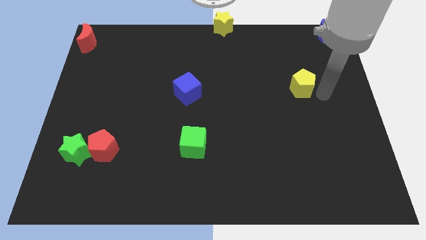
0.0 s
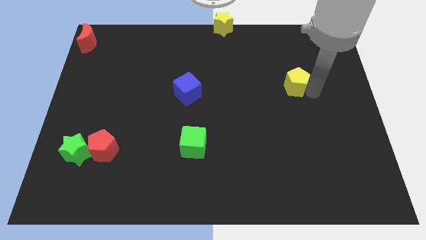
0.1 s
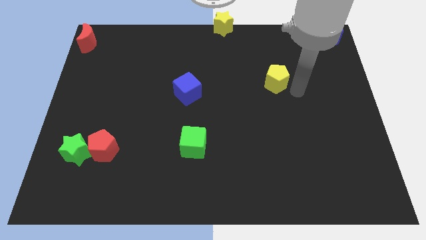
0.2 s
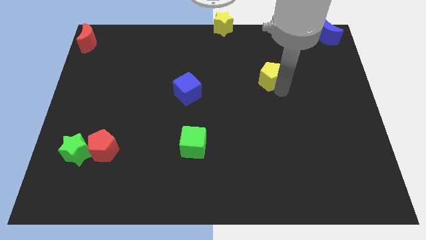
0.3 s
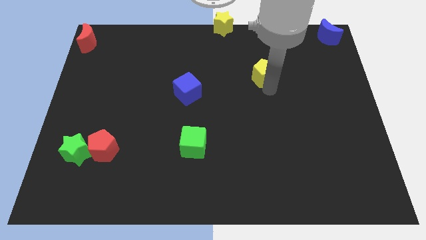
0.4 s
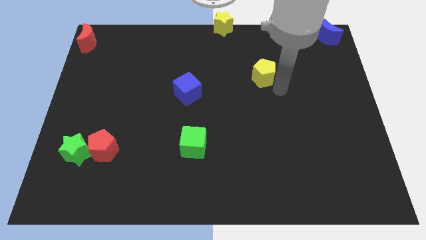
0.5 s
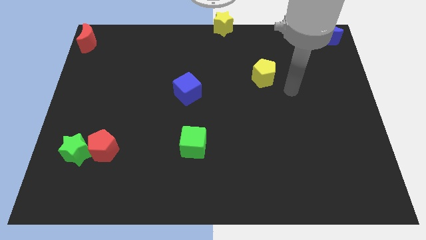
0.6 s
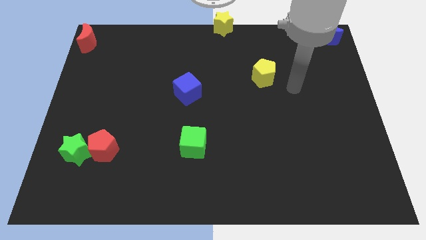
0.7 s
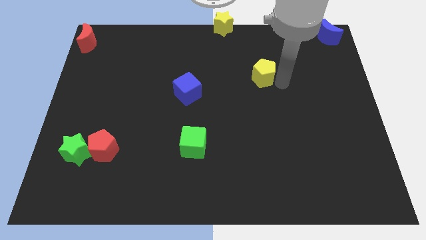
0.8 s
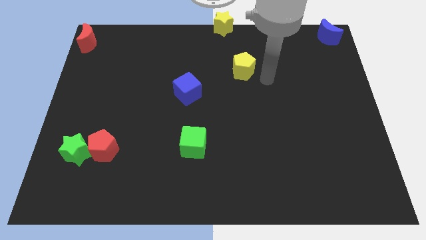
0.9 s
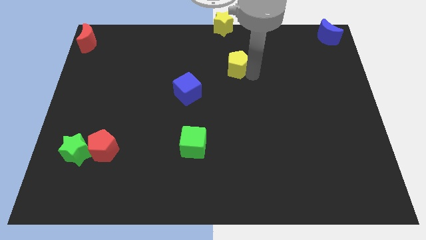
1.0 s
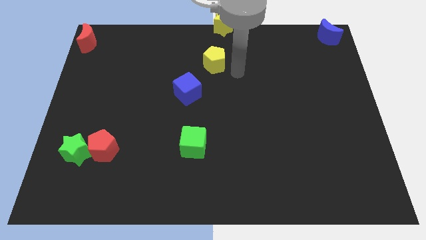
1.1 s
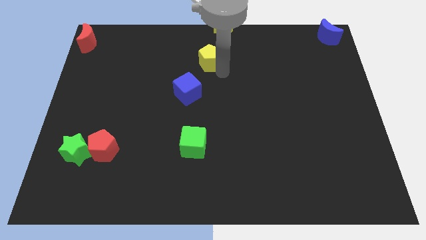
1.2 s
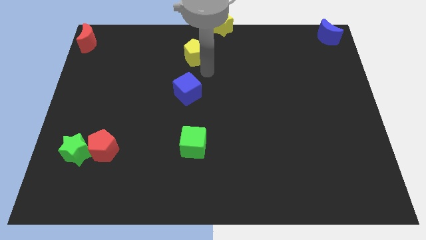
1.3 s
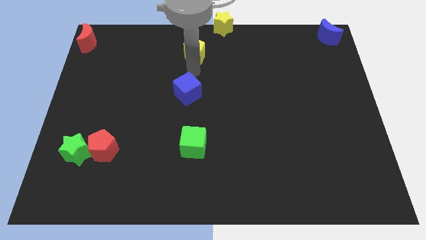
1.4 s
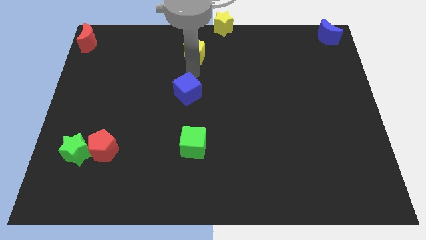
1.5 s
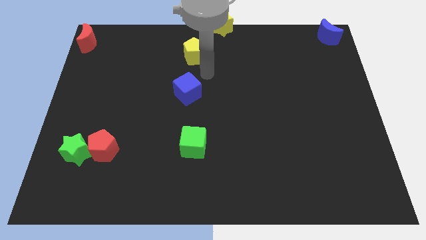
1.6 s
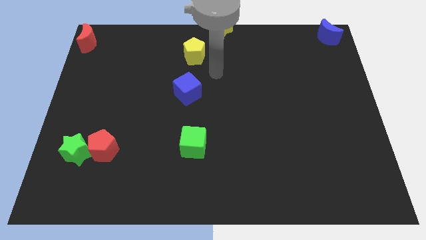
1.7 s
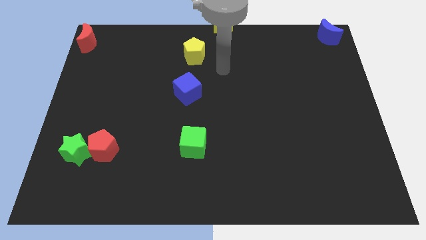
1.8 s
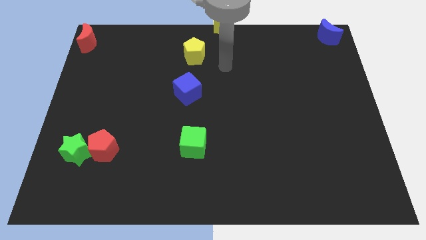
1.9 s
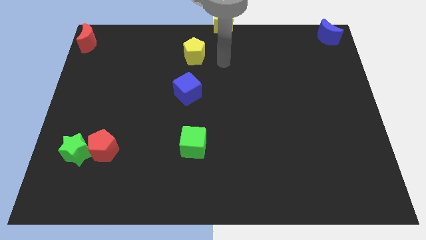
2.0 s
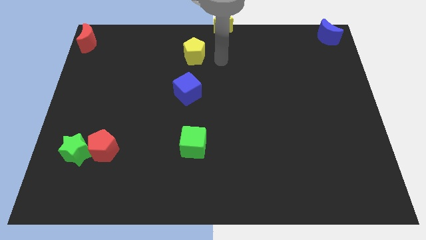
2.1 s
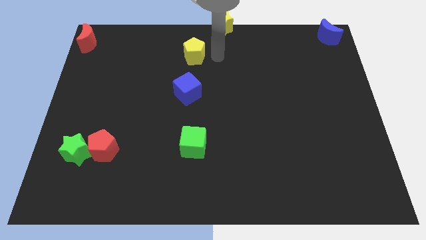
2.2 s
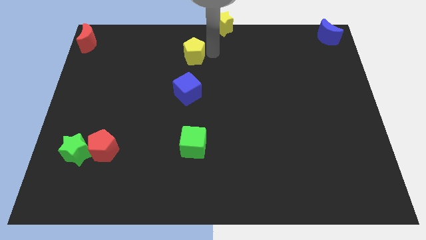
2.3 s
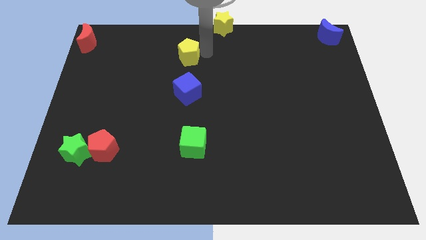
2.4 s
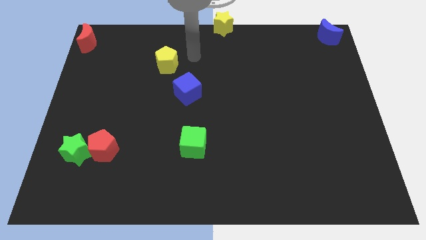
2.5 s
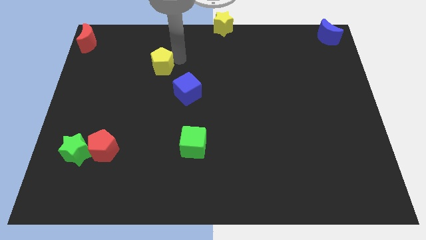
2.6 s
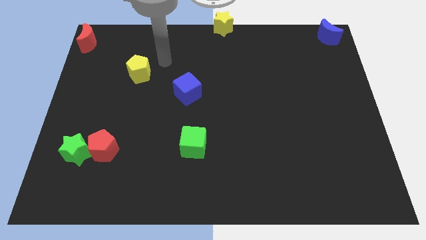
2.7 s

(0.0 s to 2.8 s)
place the yellow pentagon in between the red moon and blue cube

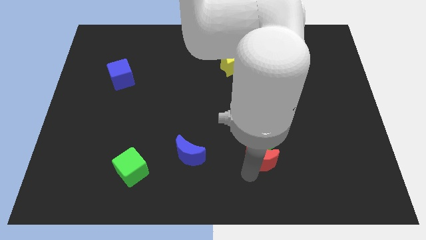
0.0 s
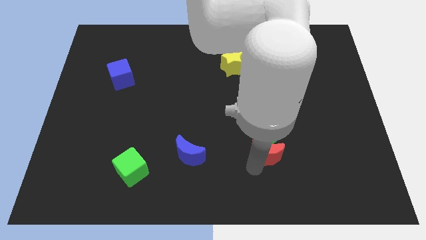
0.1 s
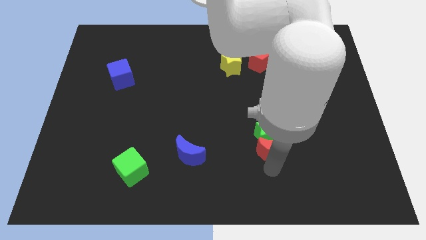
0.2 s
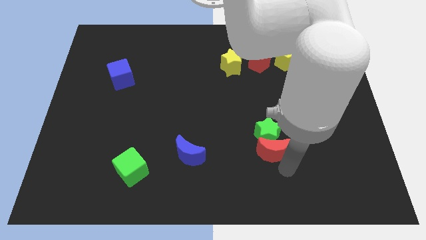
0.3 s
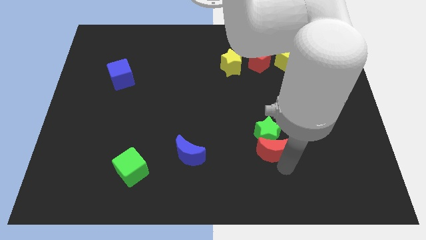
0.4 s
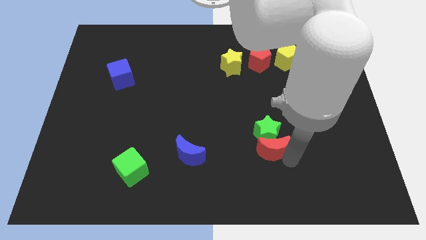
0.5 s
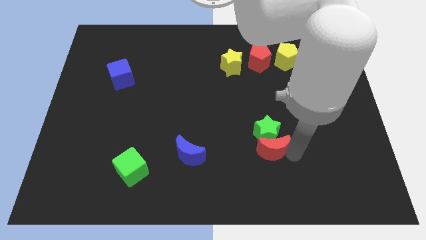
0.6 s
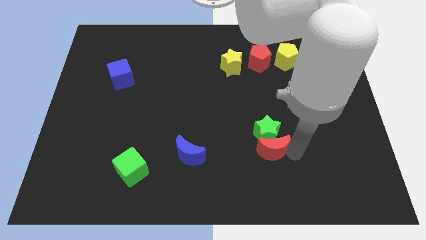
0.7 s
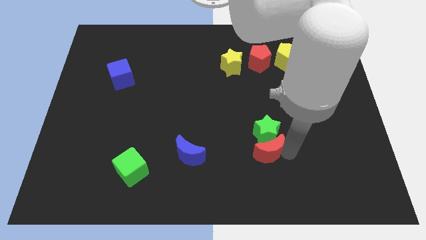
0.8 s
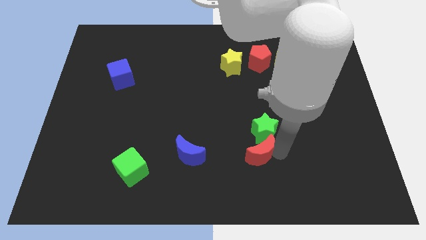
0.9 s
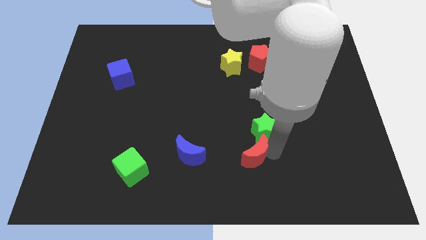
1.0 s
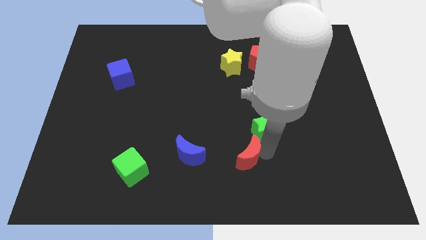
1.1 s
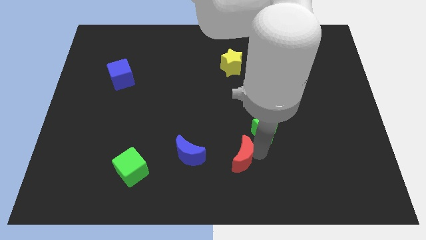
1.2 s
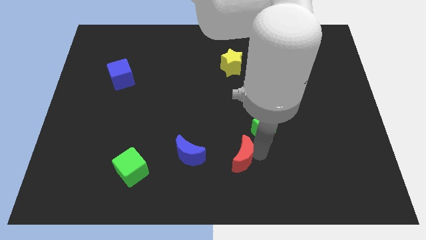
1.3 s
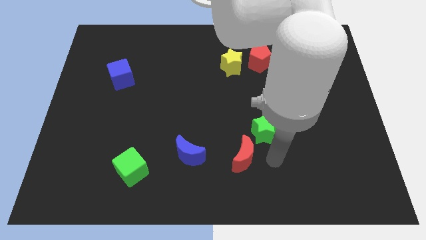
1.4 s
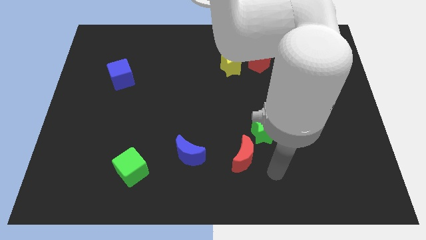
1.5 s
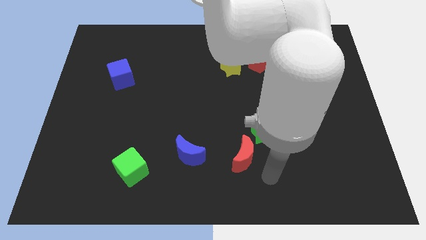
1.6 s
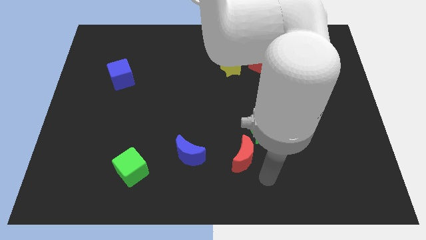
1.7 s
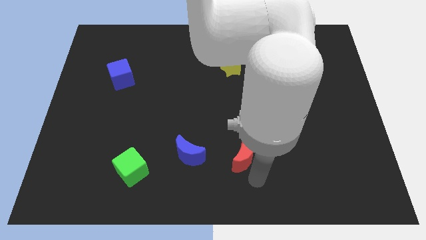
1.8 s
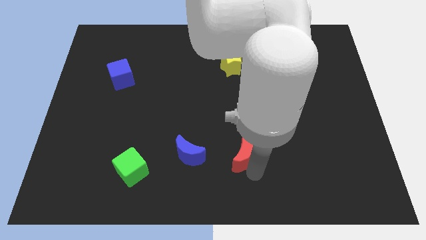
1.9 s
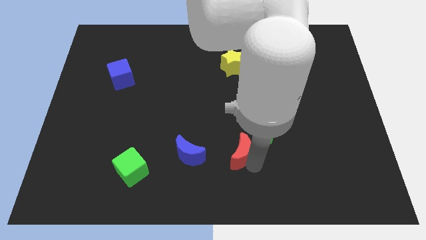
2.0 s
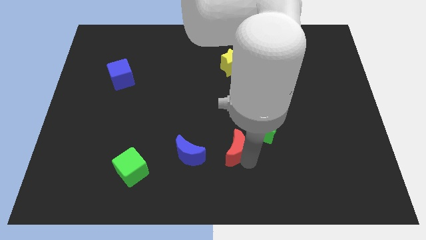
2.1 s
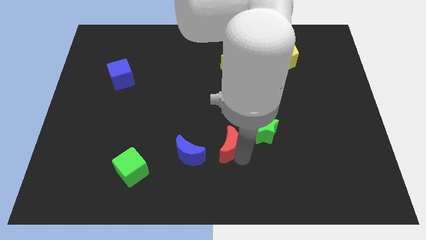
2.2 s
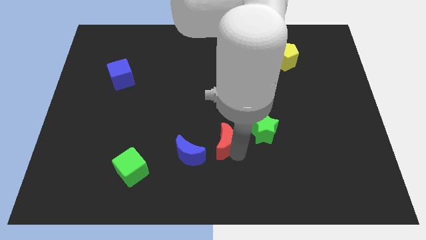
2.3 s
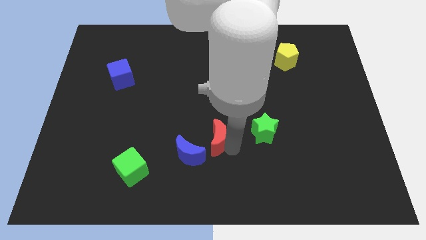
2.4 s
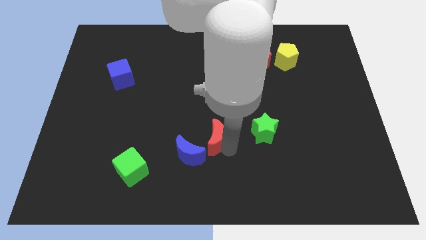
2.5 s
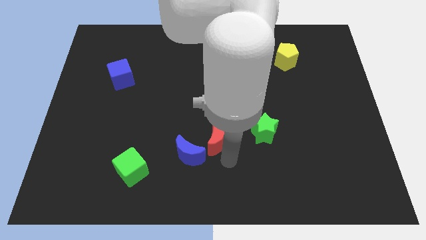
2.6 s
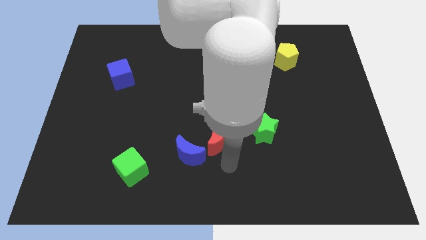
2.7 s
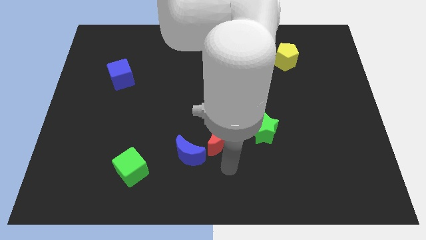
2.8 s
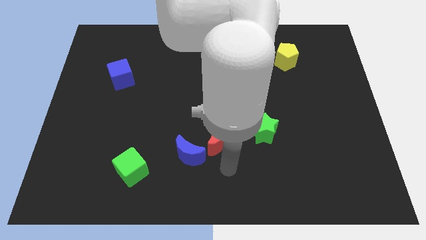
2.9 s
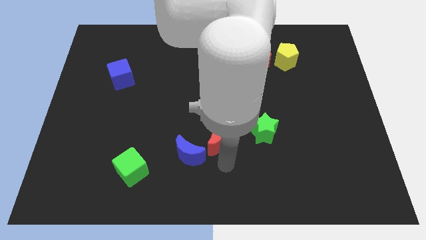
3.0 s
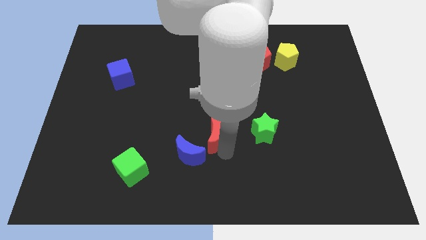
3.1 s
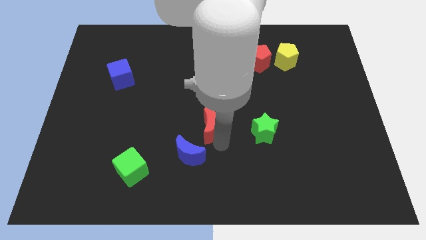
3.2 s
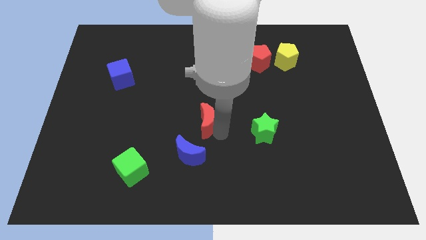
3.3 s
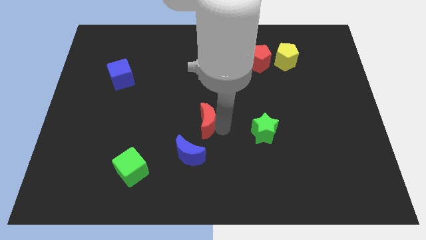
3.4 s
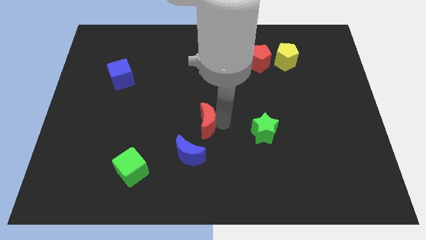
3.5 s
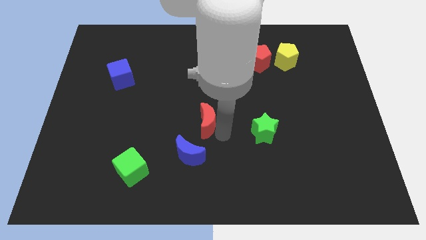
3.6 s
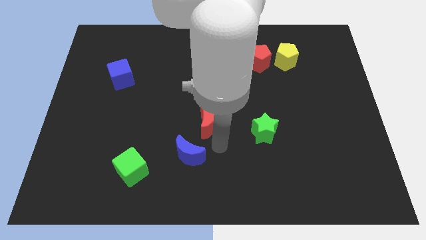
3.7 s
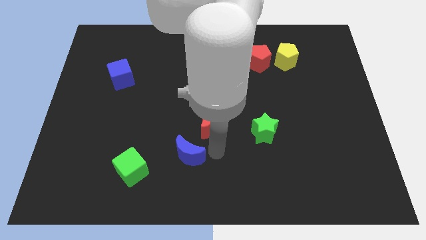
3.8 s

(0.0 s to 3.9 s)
place the red crescent above the blue crescent

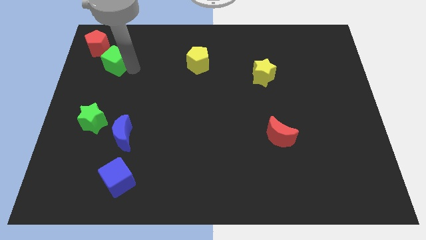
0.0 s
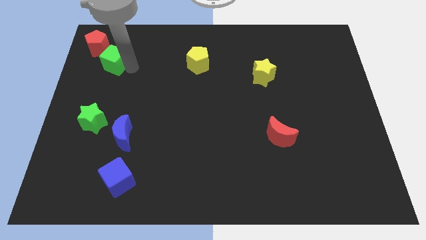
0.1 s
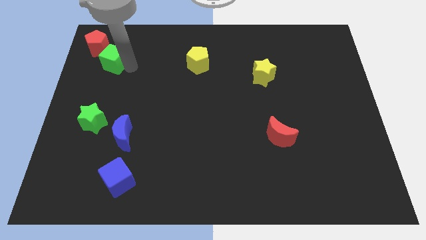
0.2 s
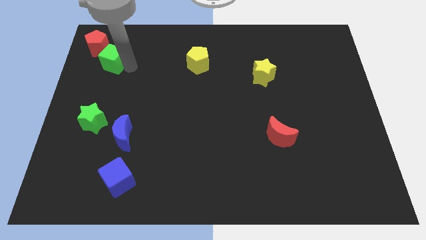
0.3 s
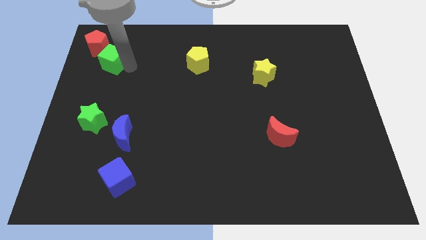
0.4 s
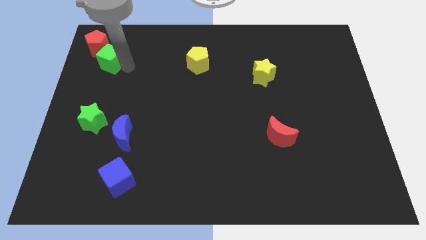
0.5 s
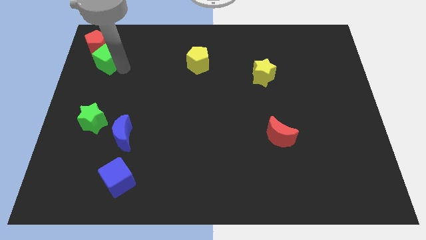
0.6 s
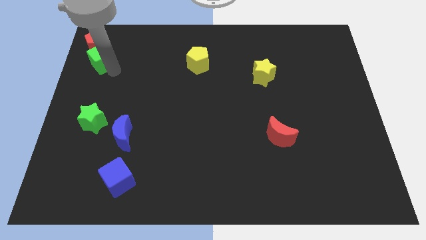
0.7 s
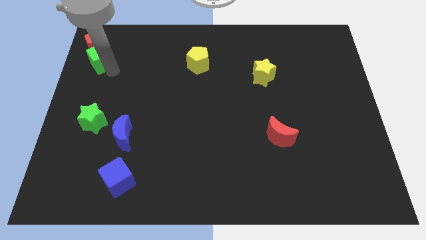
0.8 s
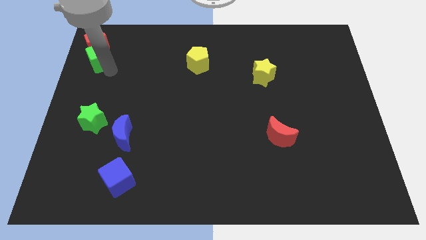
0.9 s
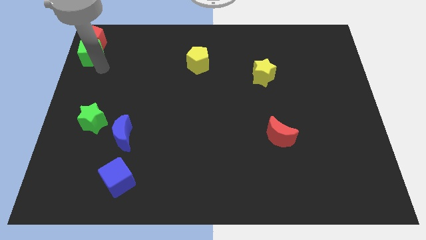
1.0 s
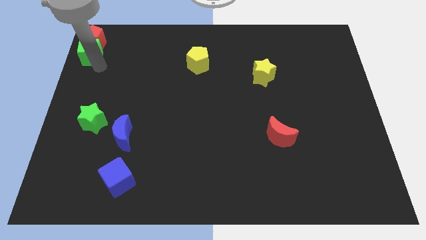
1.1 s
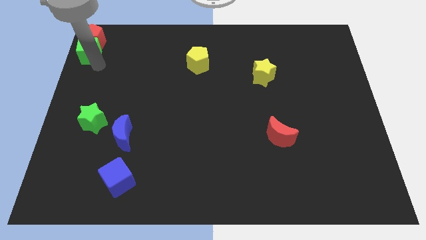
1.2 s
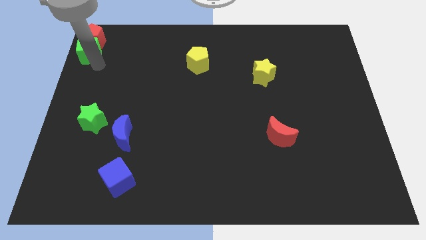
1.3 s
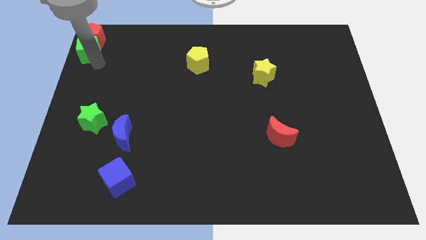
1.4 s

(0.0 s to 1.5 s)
push the green cube and red pentagon at the top left corner of the board

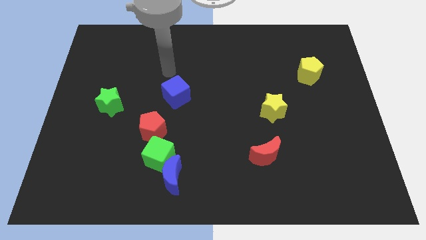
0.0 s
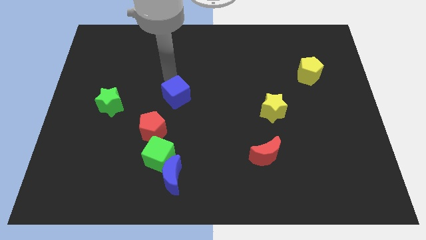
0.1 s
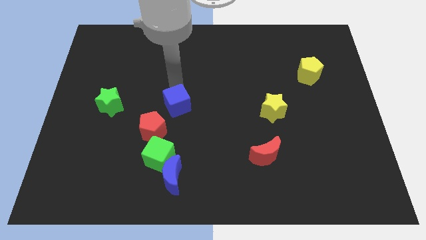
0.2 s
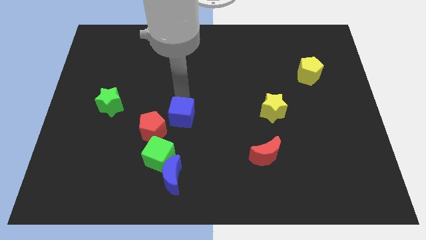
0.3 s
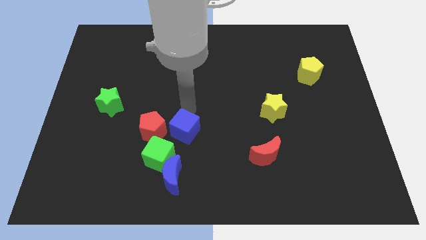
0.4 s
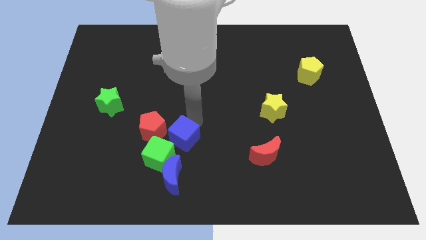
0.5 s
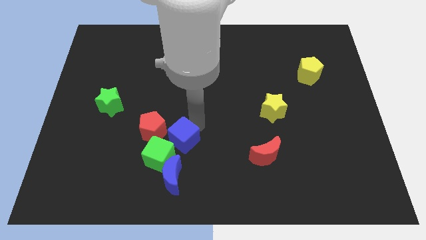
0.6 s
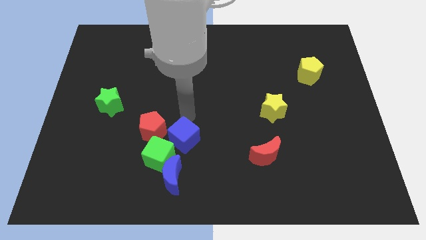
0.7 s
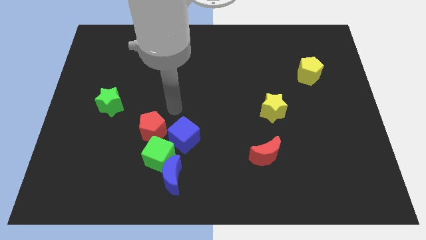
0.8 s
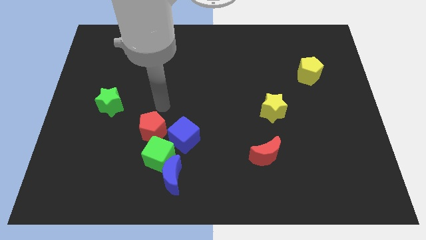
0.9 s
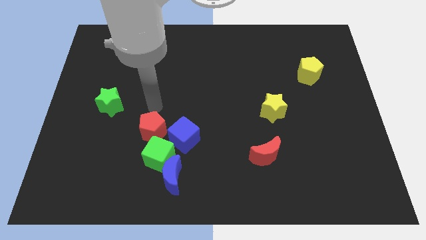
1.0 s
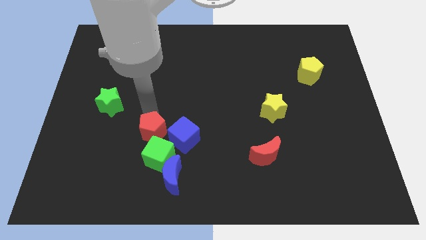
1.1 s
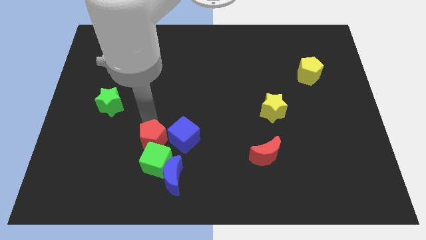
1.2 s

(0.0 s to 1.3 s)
place blue cube right to red pentagon and green cube
